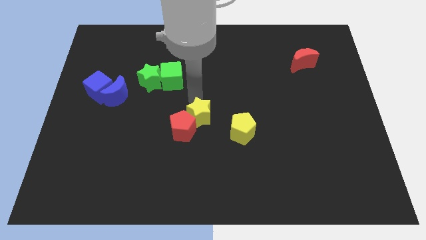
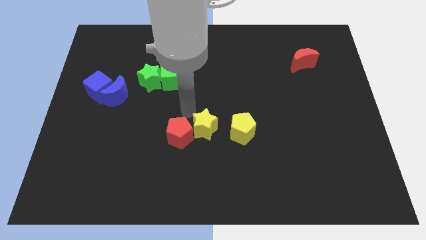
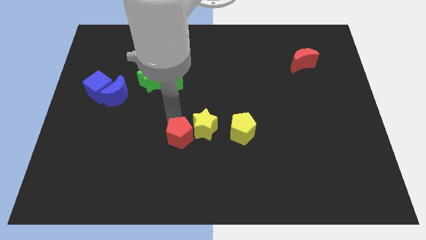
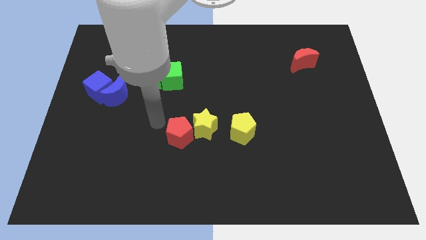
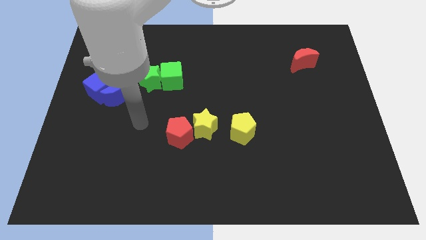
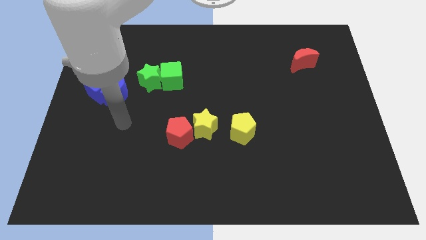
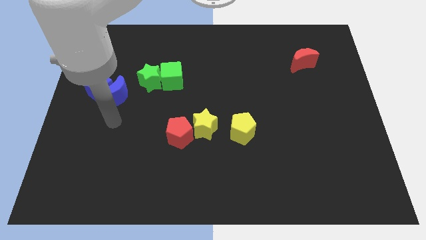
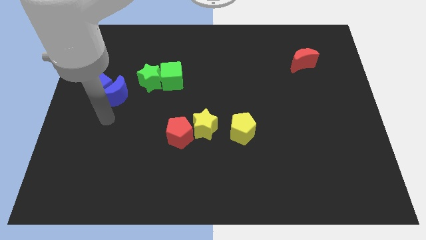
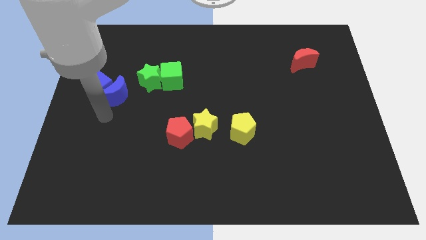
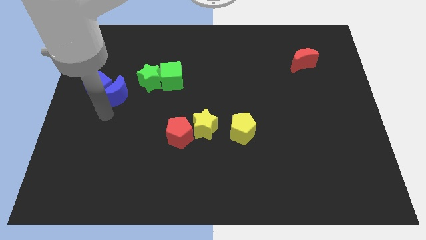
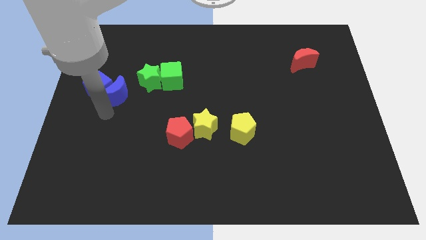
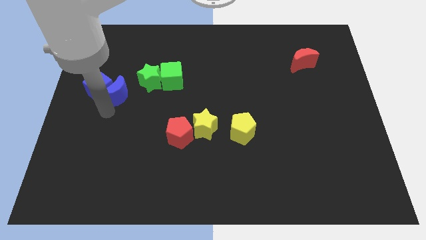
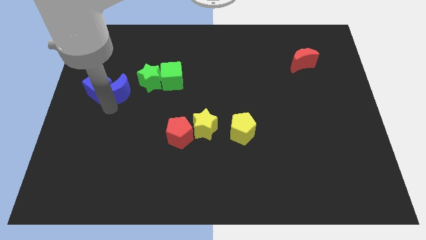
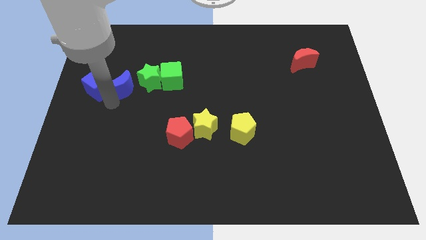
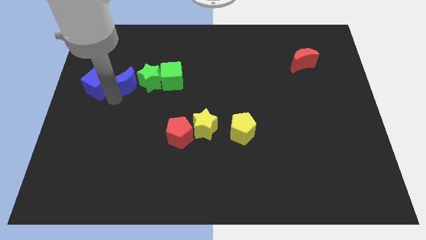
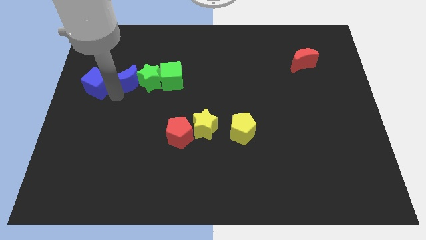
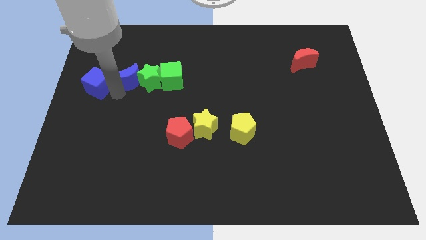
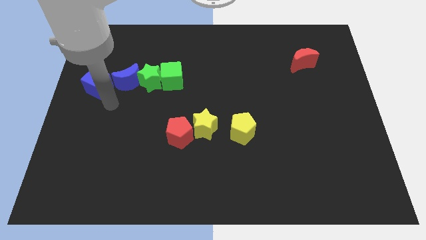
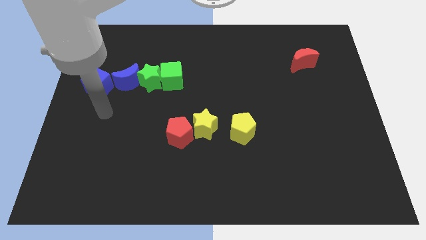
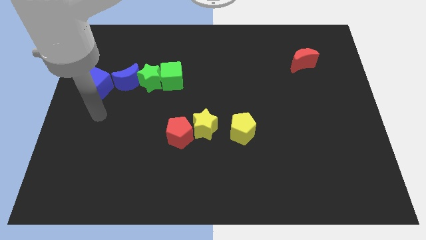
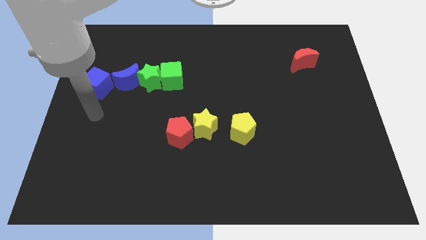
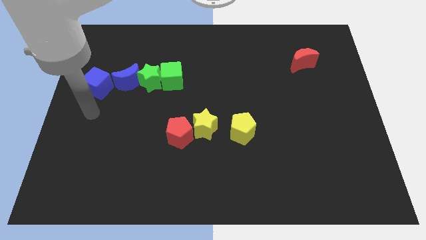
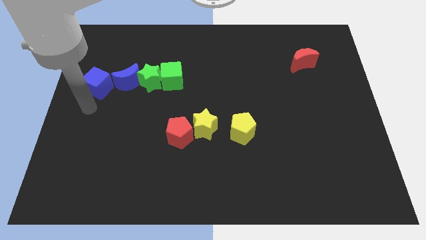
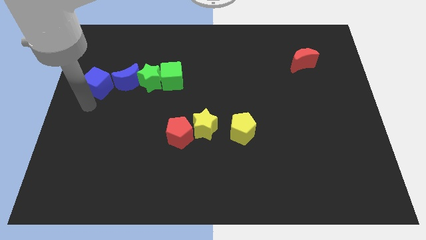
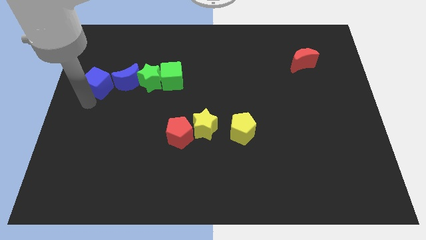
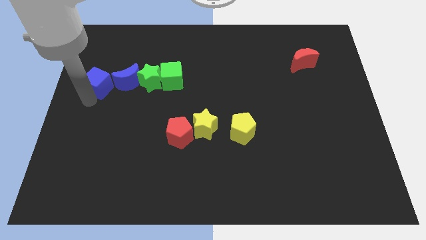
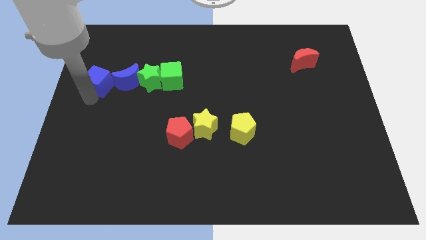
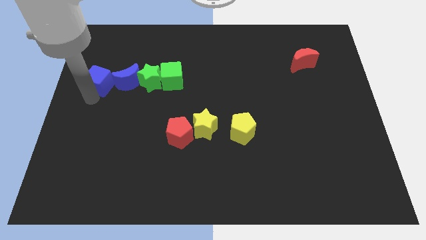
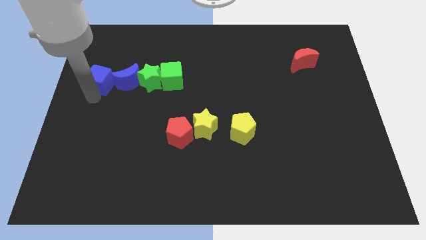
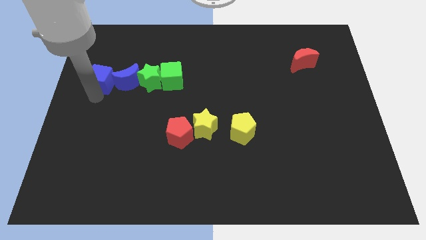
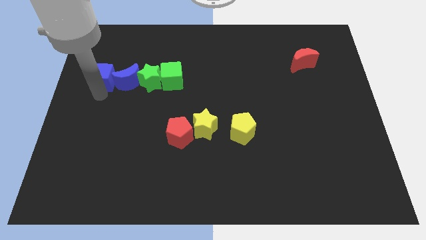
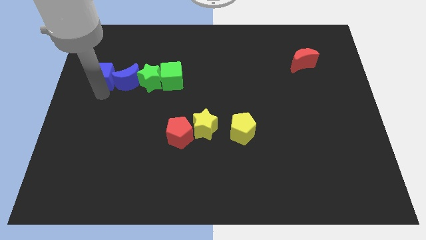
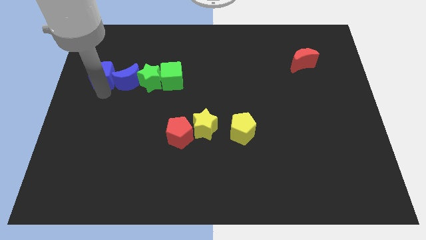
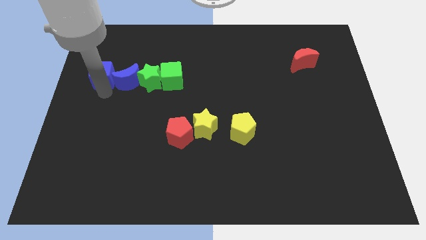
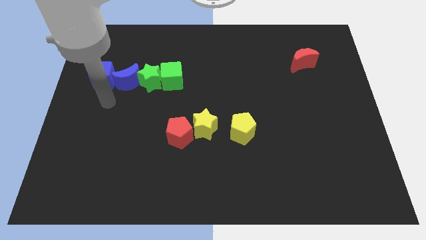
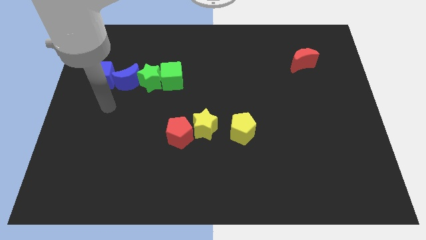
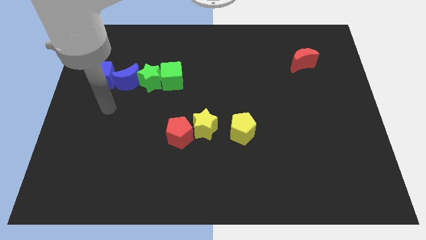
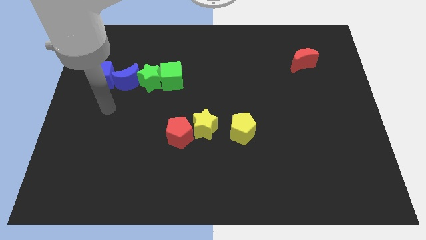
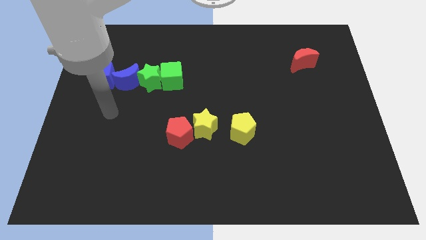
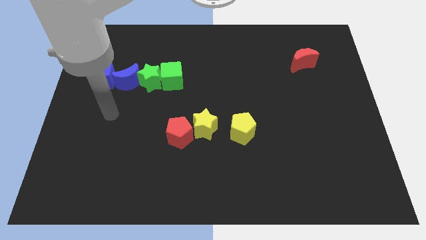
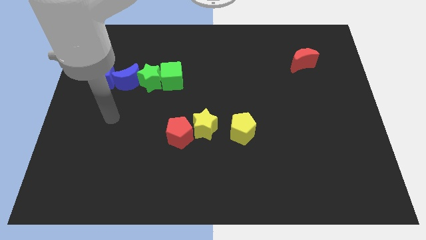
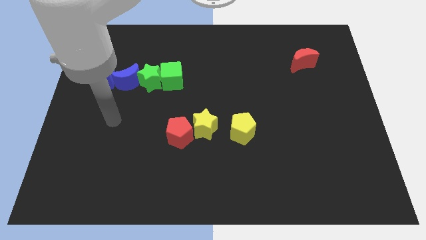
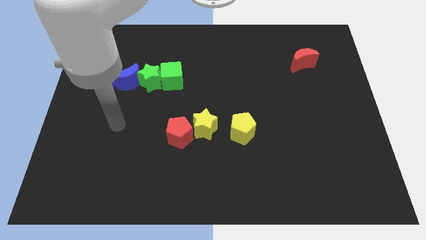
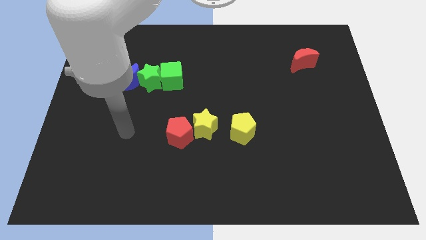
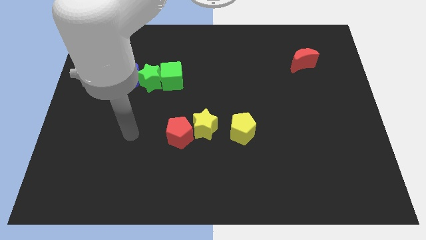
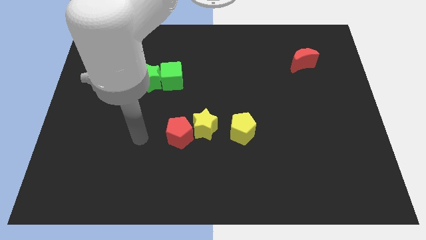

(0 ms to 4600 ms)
place the blue blocks in line with the green blocks

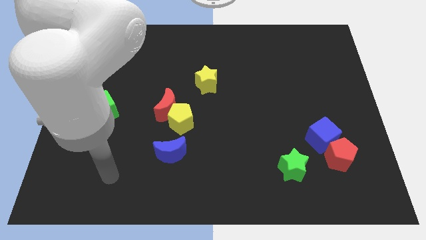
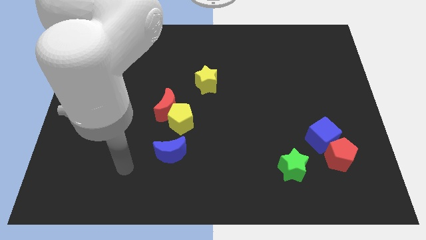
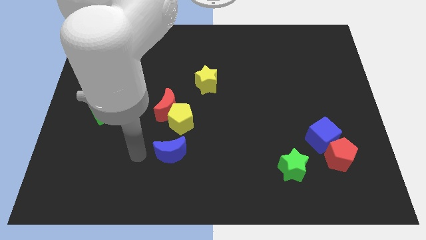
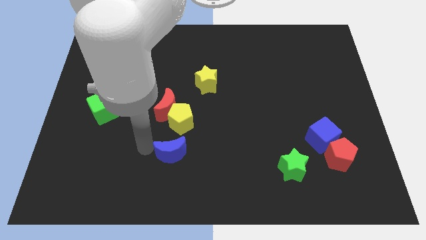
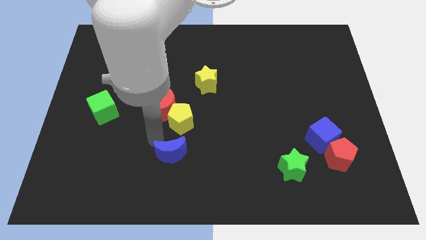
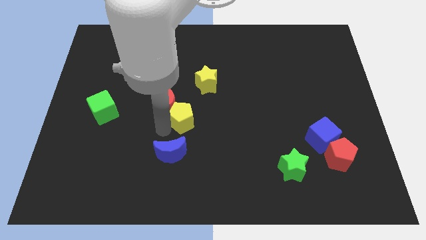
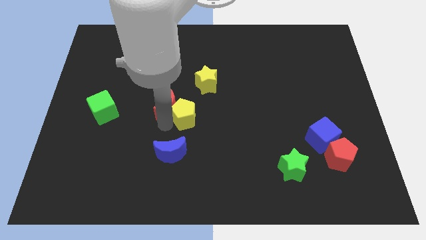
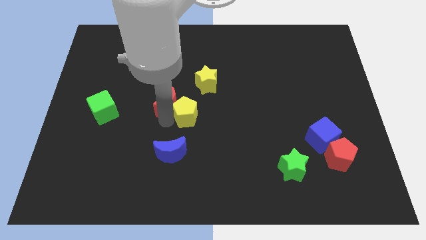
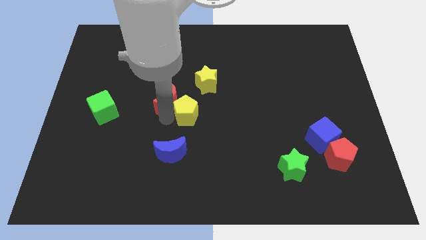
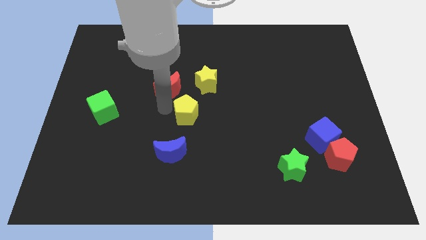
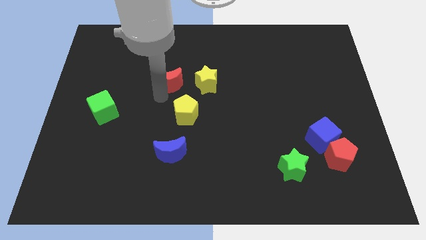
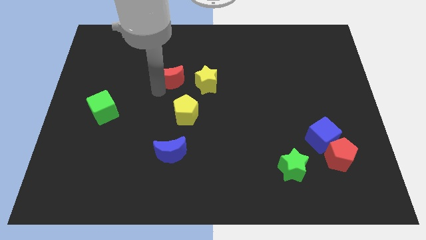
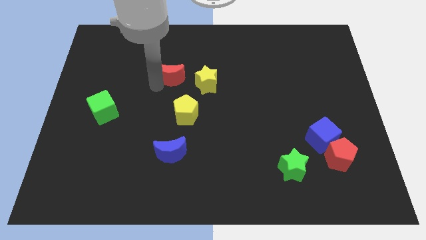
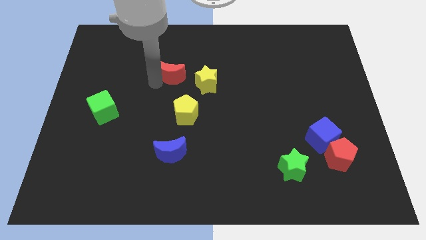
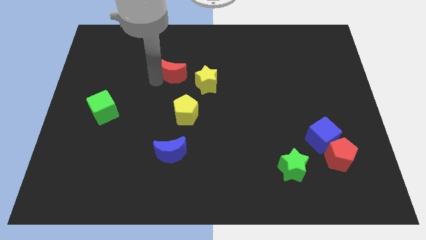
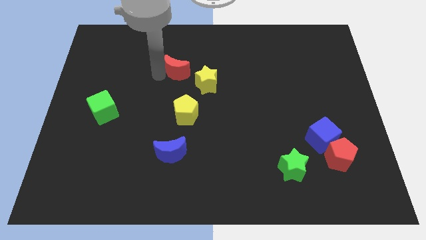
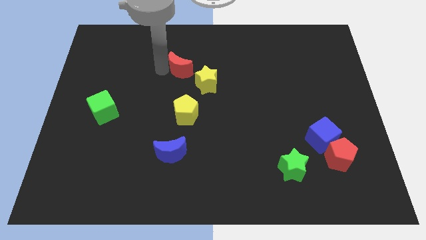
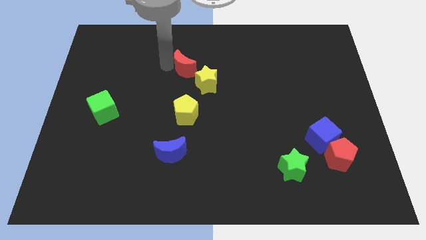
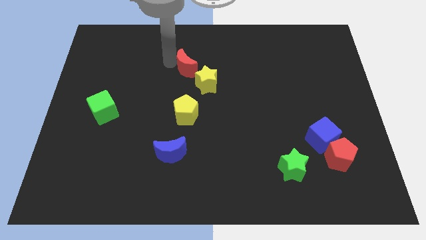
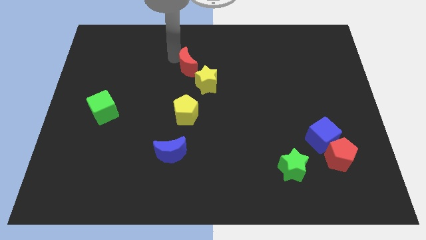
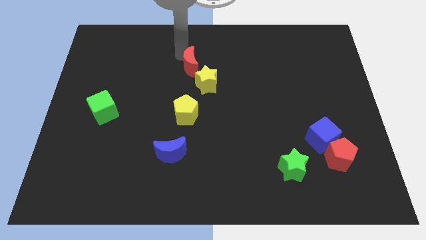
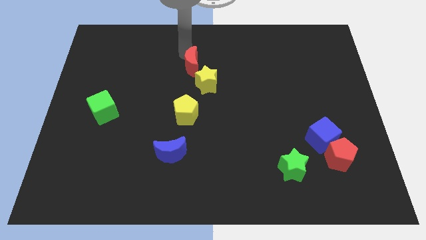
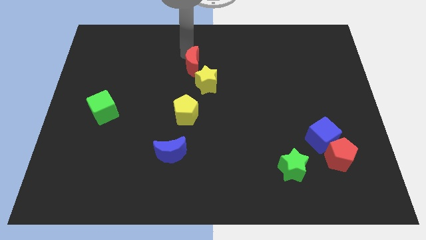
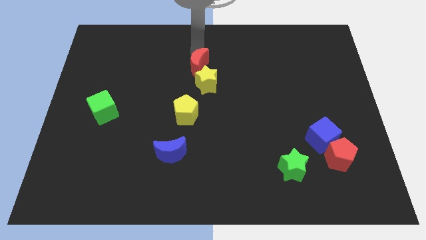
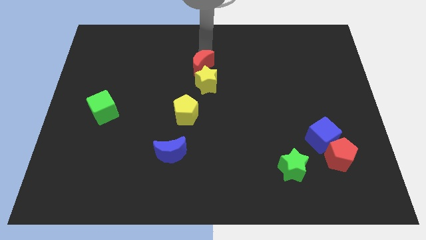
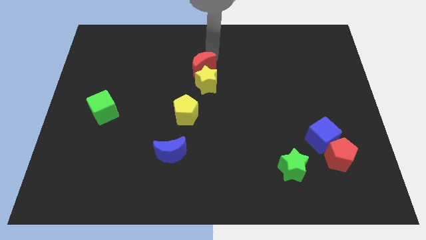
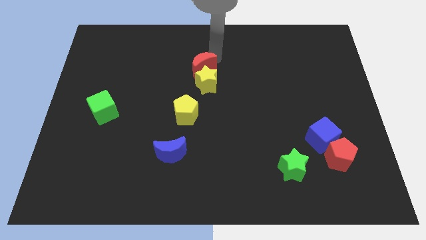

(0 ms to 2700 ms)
place the red crescent above the yellow star

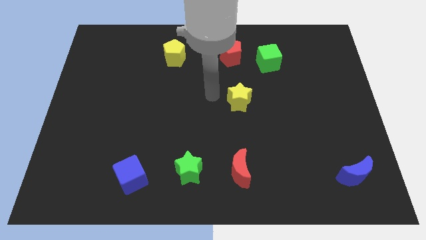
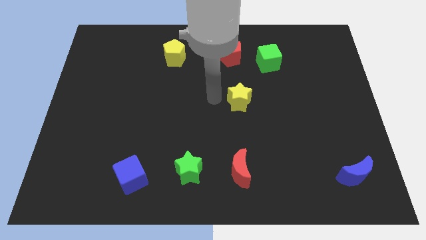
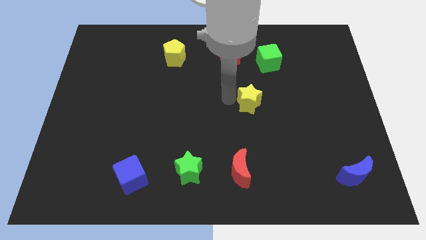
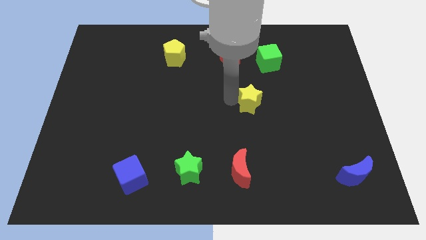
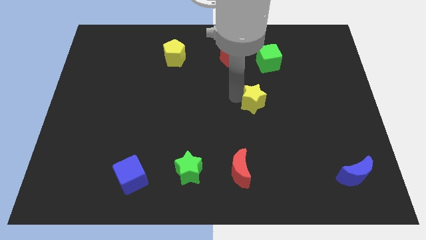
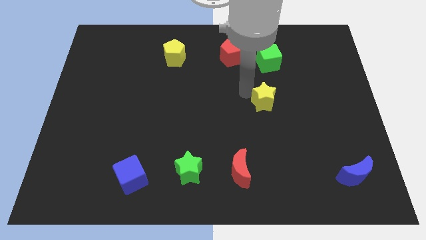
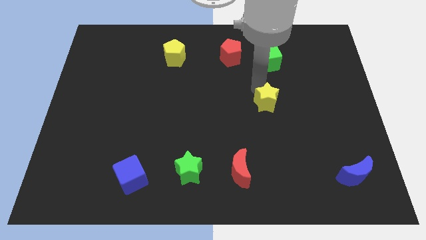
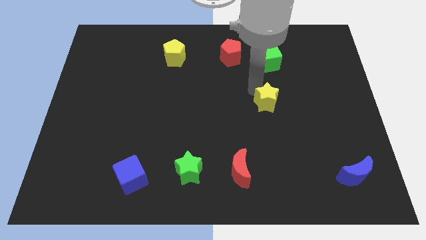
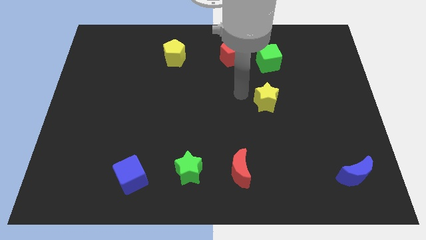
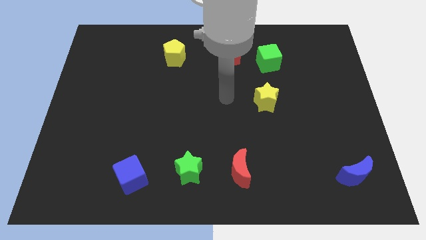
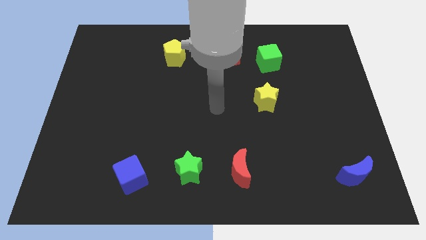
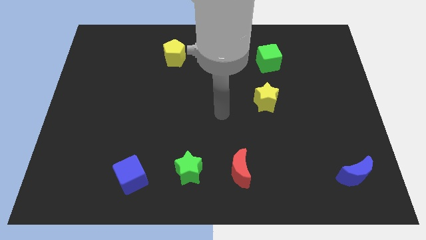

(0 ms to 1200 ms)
move the yellow star to the right

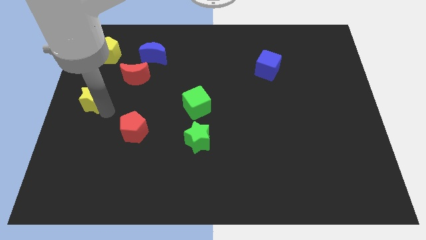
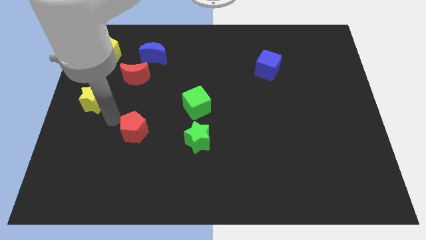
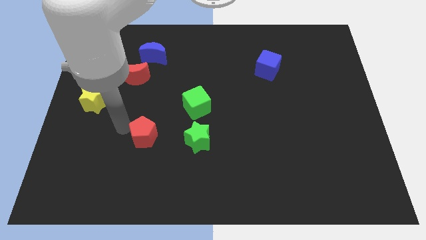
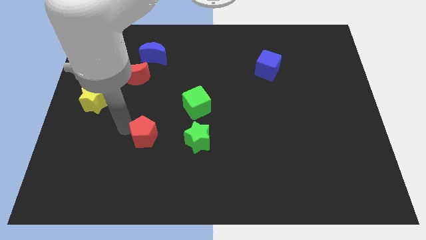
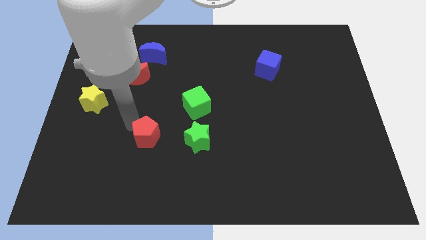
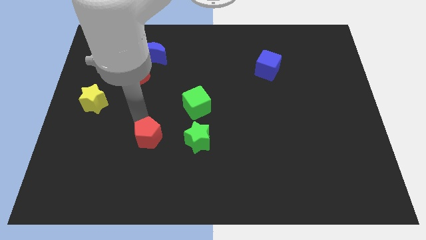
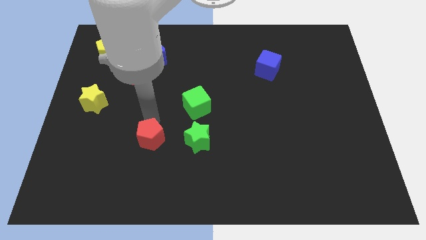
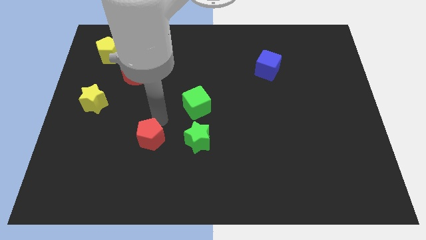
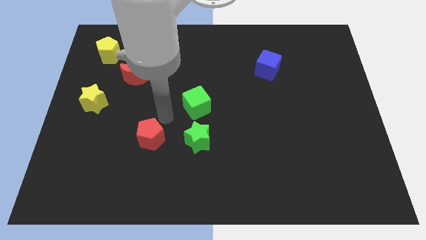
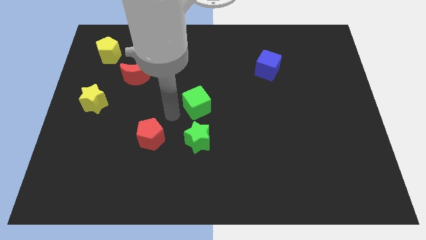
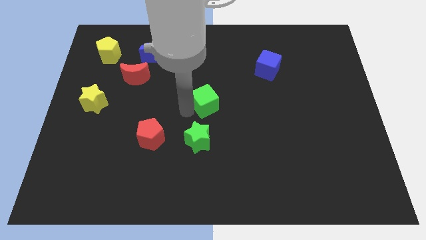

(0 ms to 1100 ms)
move the red pentagon towards the right
